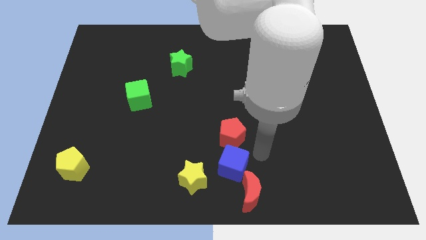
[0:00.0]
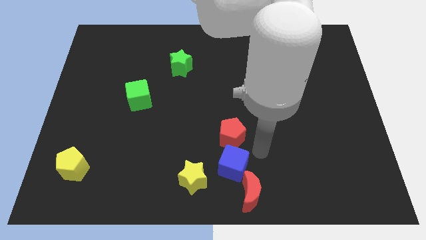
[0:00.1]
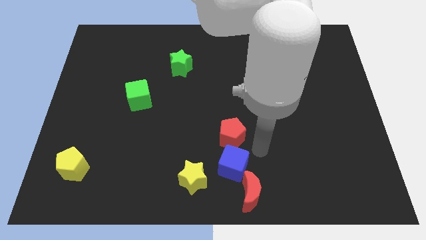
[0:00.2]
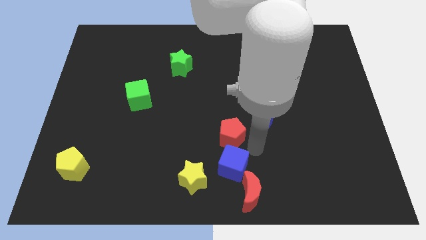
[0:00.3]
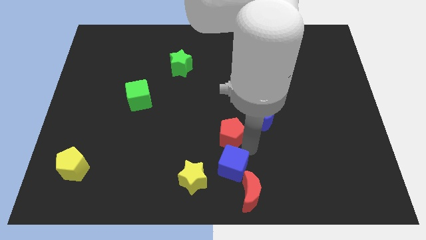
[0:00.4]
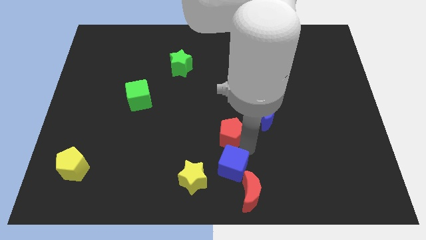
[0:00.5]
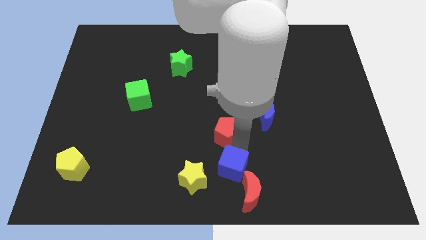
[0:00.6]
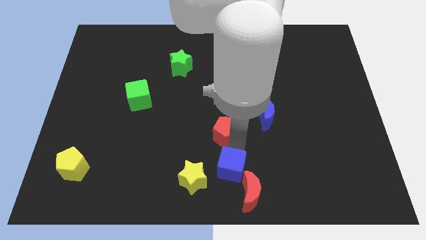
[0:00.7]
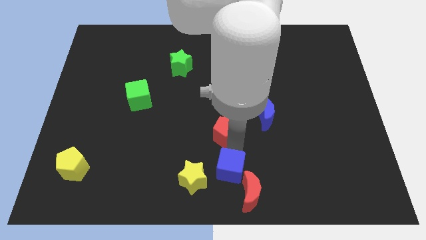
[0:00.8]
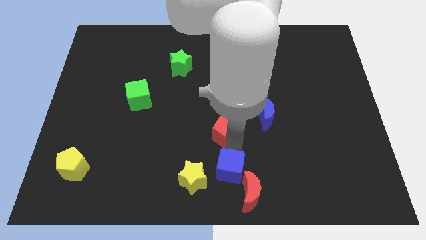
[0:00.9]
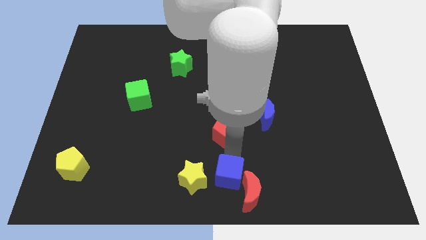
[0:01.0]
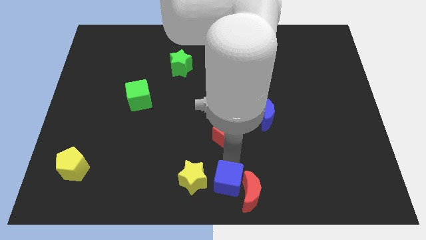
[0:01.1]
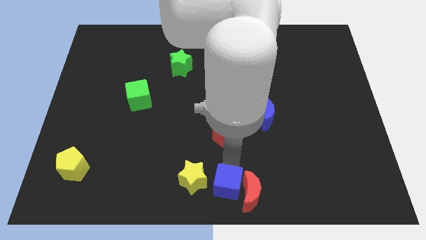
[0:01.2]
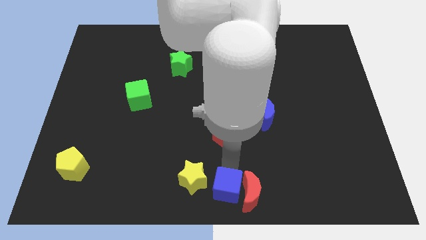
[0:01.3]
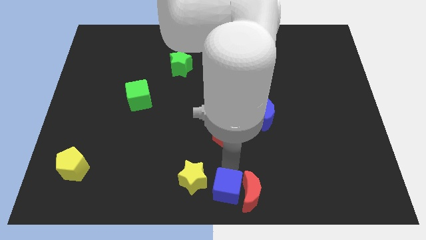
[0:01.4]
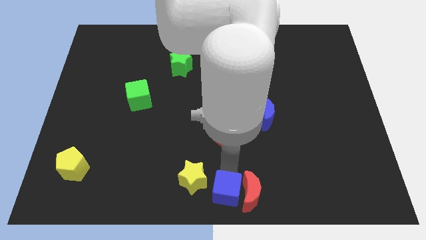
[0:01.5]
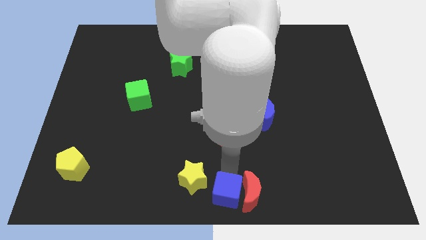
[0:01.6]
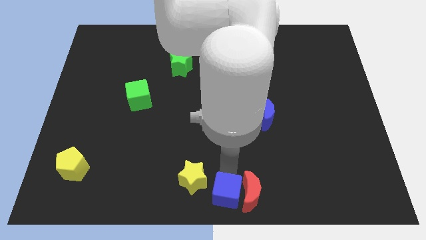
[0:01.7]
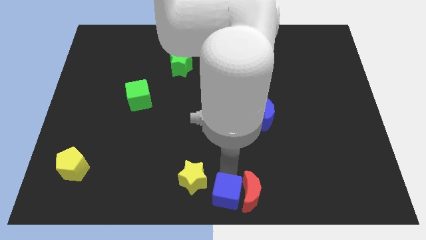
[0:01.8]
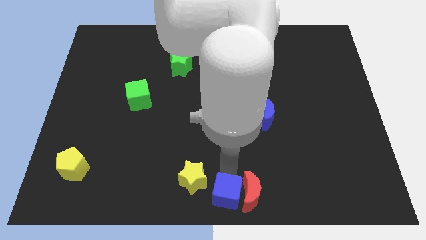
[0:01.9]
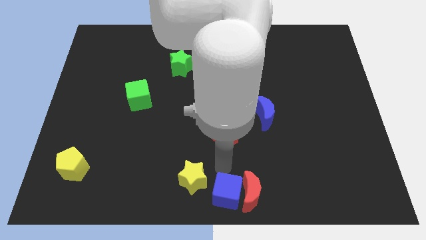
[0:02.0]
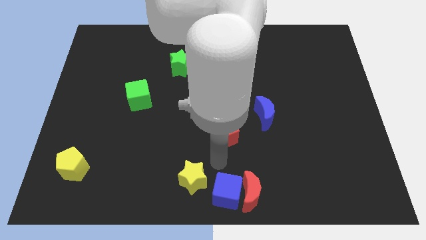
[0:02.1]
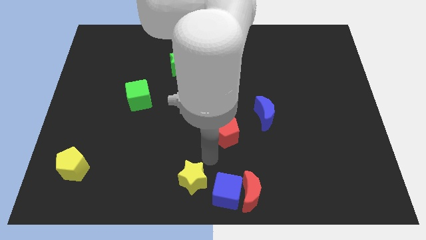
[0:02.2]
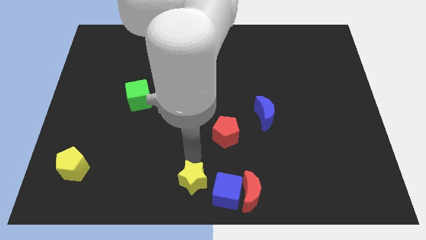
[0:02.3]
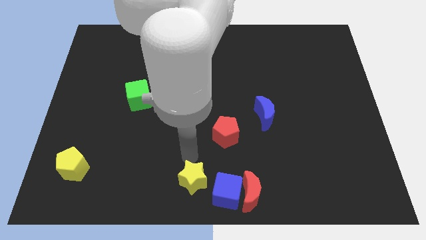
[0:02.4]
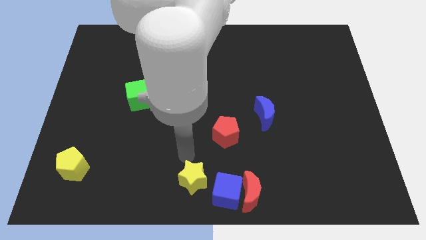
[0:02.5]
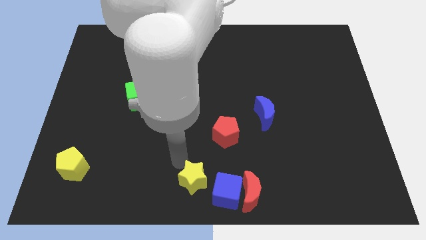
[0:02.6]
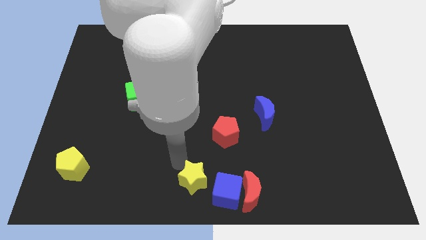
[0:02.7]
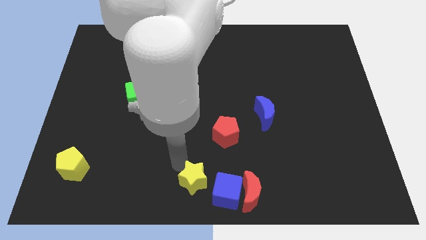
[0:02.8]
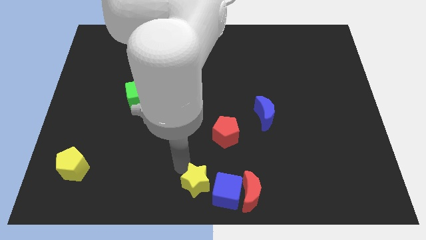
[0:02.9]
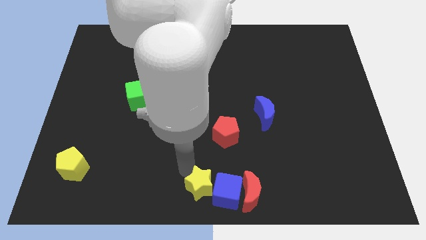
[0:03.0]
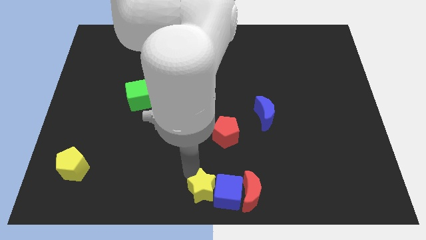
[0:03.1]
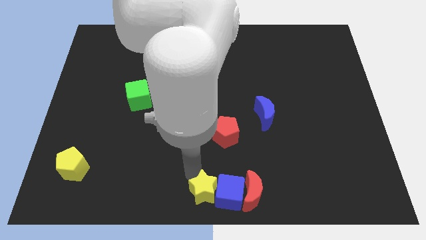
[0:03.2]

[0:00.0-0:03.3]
arrange the red moon blue cube and yellow star at the bottom center of the board

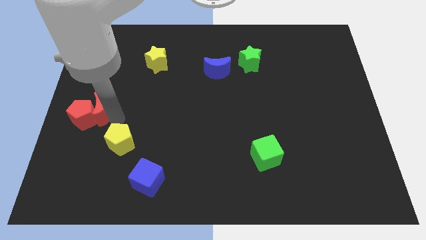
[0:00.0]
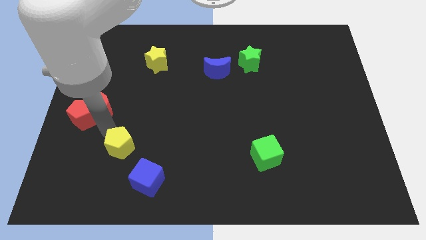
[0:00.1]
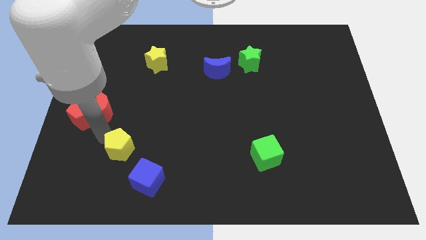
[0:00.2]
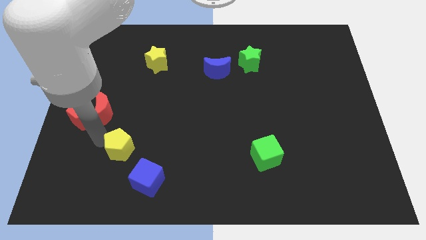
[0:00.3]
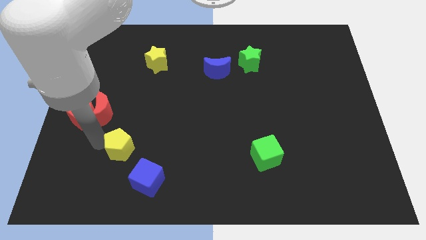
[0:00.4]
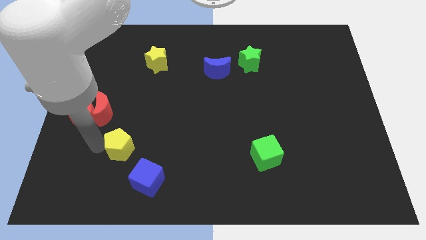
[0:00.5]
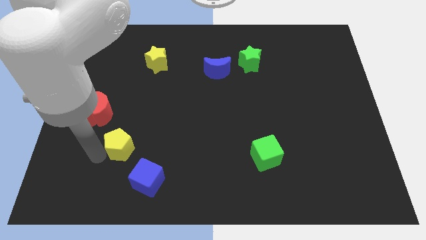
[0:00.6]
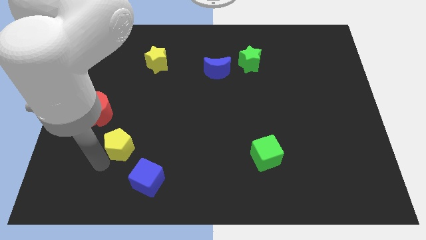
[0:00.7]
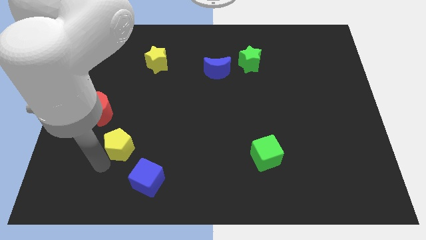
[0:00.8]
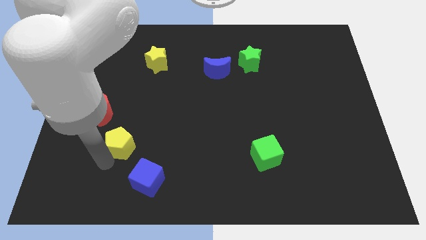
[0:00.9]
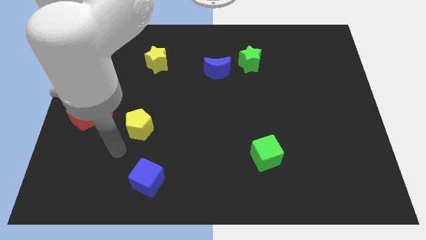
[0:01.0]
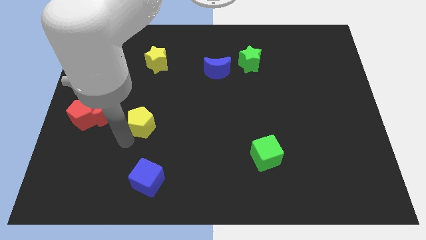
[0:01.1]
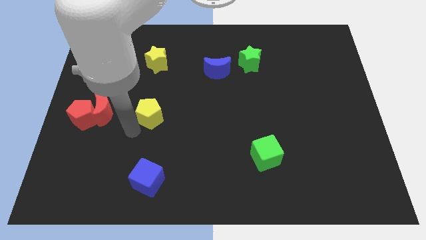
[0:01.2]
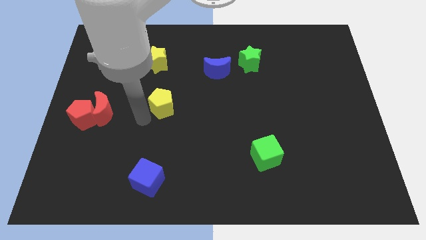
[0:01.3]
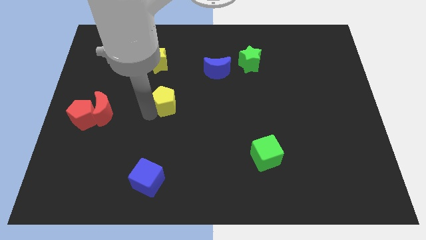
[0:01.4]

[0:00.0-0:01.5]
push the yellow pentagon below the yellow star

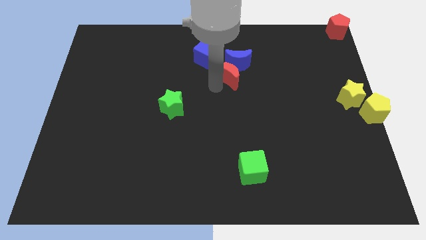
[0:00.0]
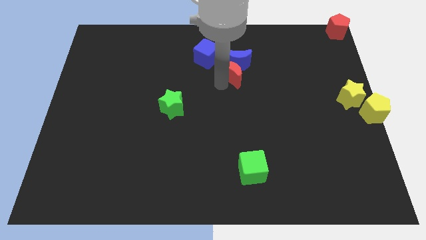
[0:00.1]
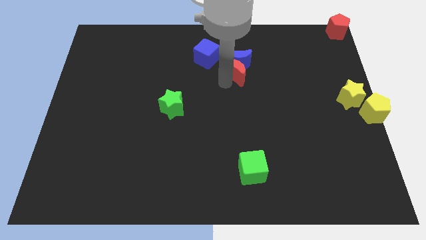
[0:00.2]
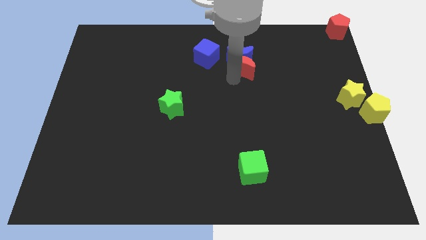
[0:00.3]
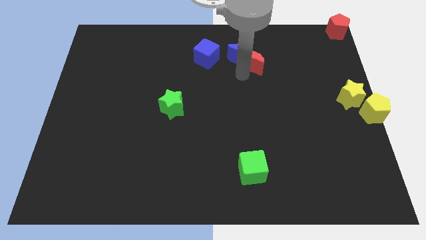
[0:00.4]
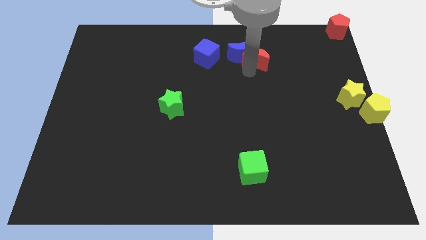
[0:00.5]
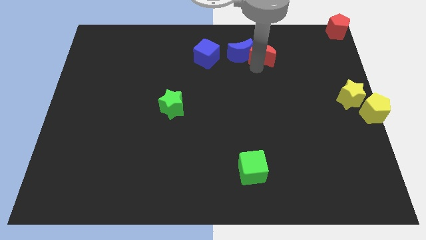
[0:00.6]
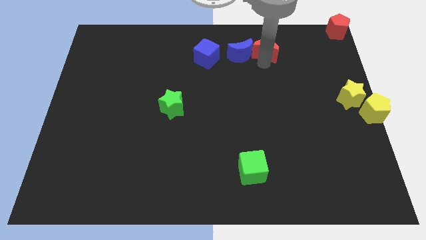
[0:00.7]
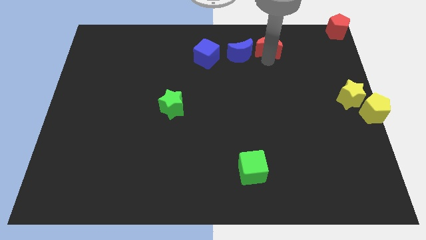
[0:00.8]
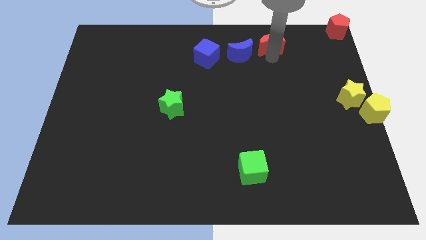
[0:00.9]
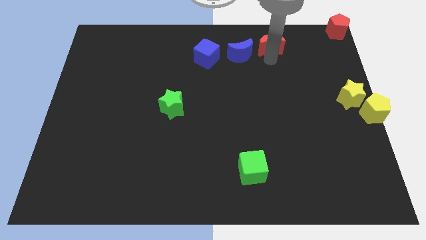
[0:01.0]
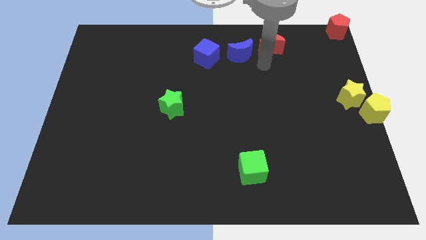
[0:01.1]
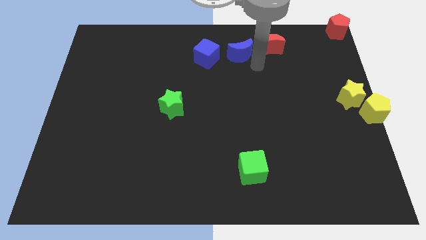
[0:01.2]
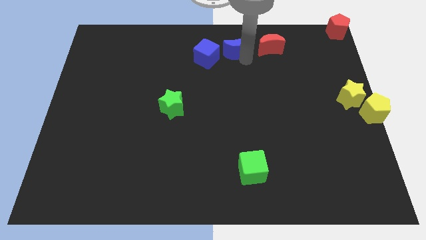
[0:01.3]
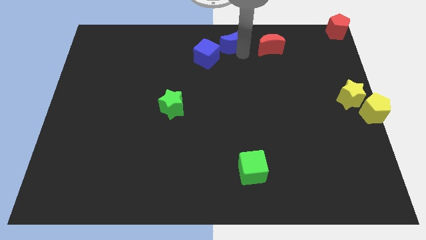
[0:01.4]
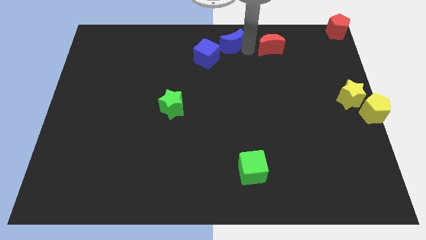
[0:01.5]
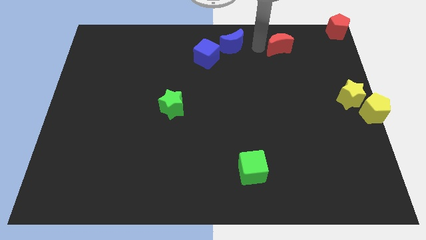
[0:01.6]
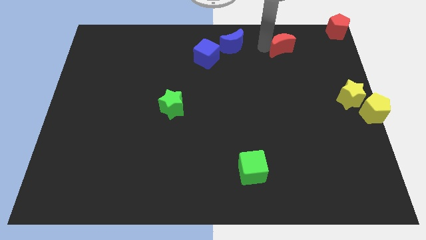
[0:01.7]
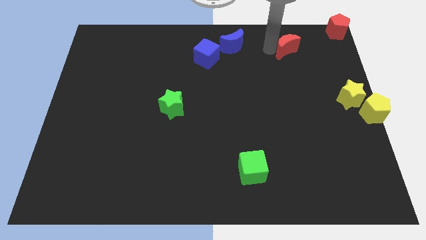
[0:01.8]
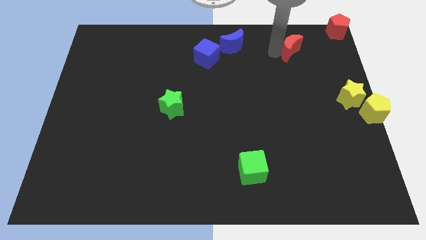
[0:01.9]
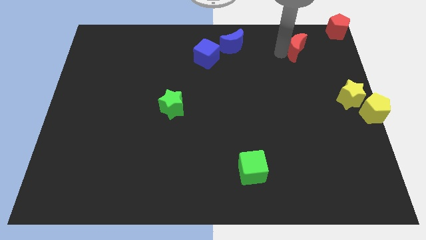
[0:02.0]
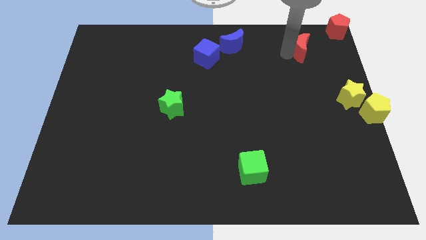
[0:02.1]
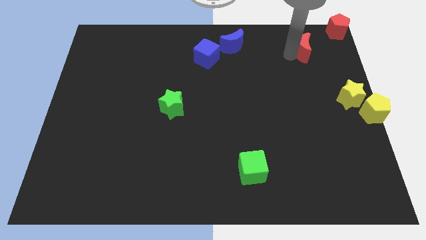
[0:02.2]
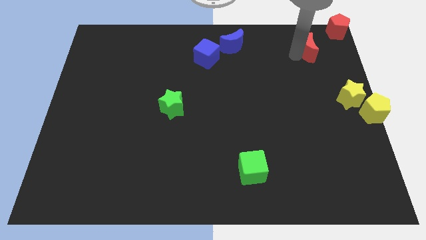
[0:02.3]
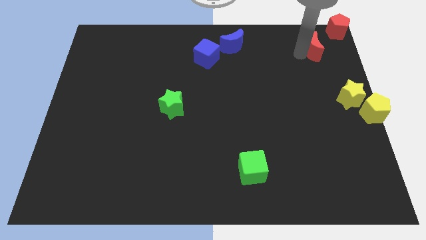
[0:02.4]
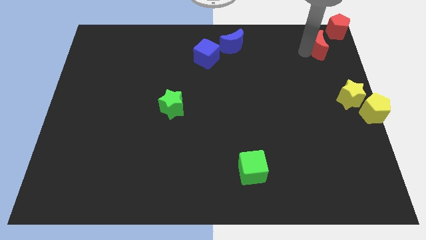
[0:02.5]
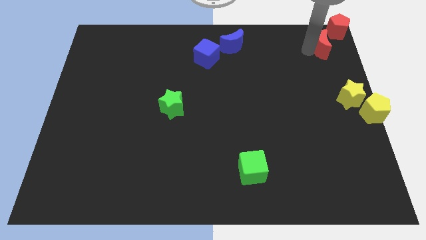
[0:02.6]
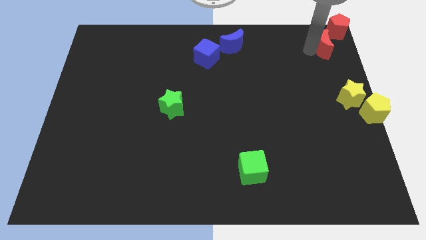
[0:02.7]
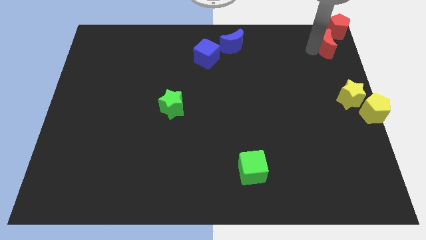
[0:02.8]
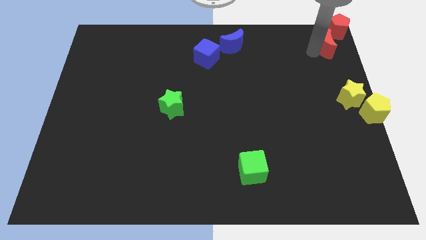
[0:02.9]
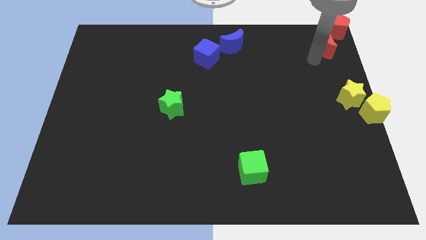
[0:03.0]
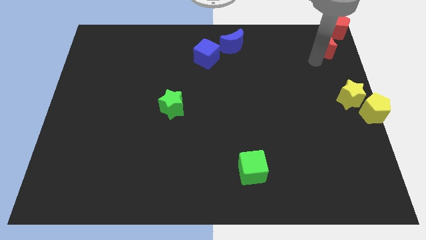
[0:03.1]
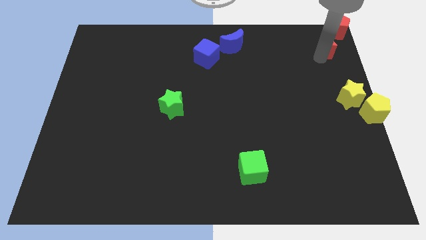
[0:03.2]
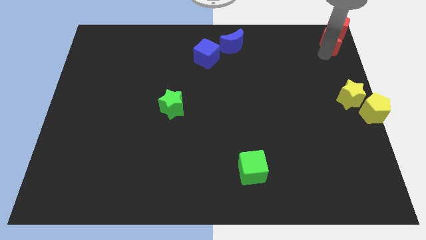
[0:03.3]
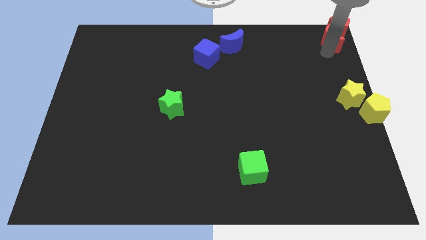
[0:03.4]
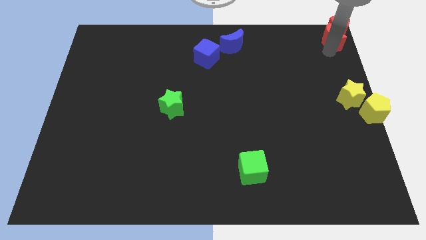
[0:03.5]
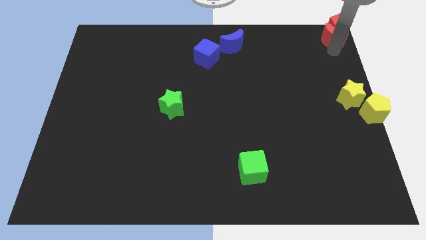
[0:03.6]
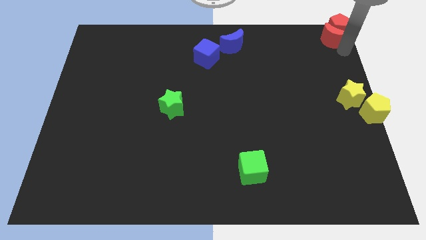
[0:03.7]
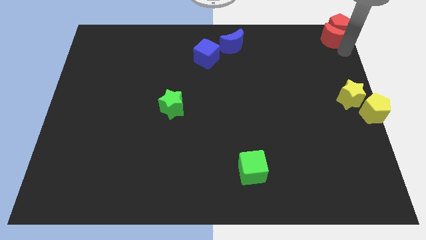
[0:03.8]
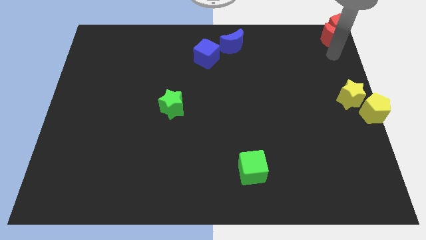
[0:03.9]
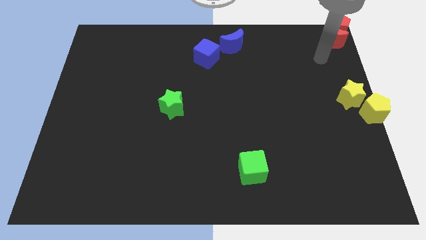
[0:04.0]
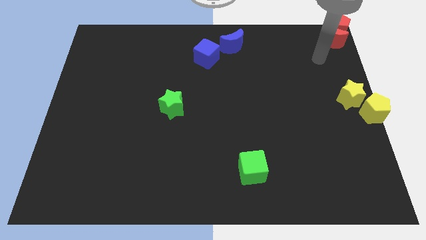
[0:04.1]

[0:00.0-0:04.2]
place the red crescent below the red pentagon
